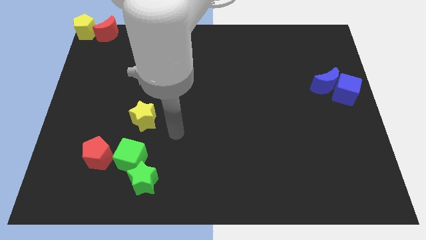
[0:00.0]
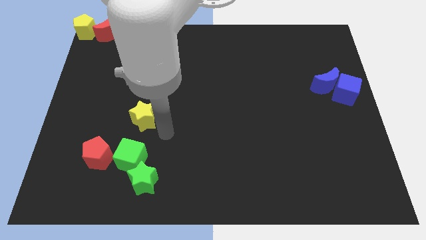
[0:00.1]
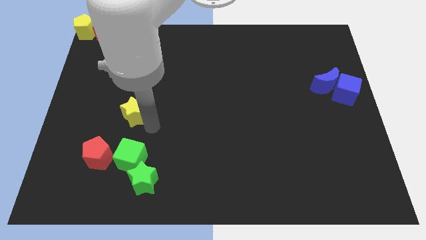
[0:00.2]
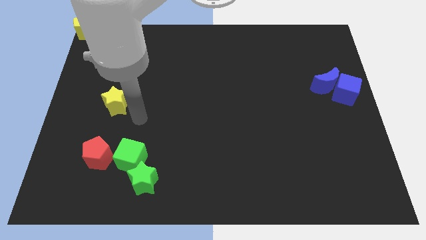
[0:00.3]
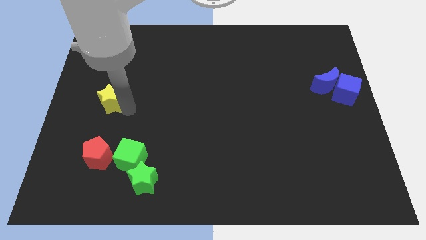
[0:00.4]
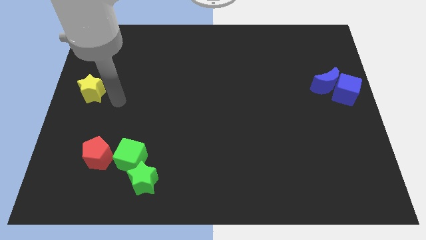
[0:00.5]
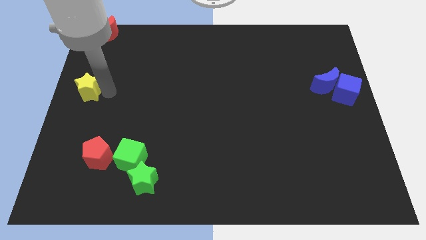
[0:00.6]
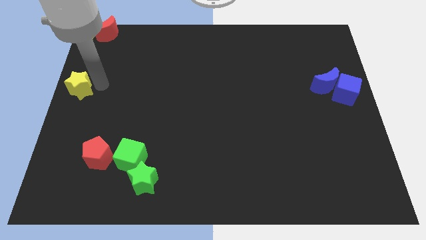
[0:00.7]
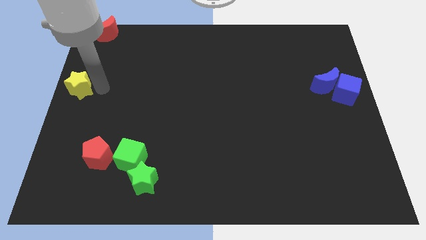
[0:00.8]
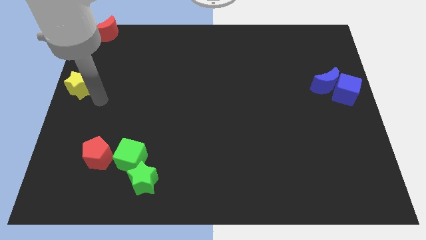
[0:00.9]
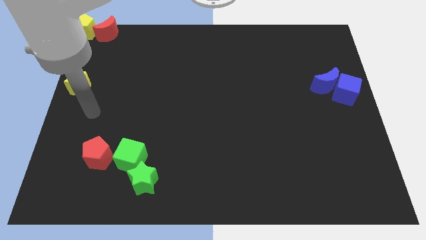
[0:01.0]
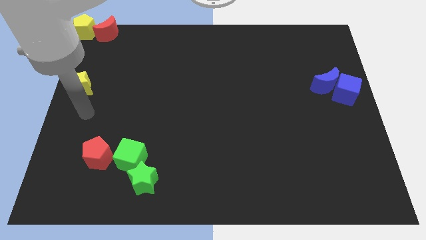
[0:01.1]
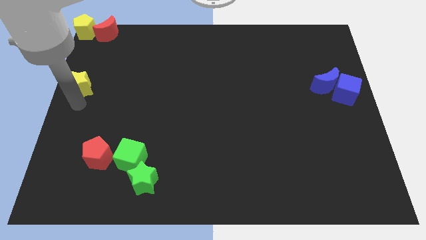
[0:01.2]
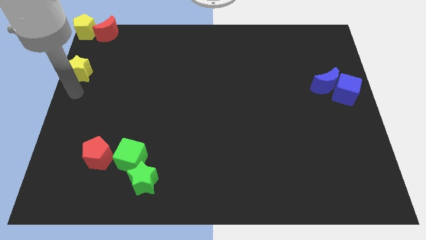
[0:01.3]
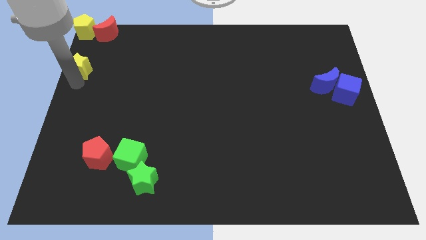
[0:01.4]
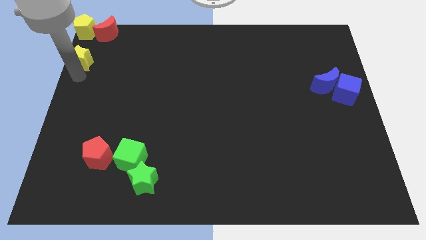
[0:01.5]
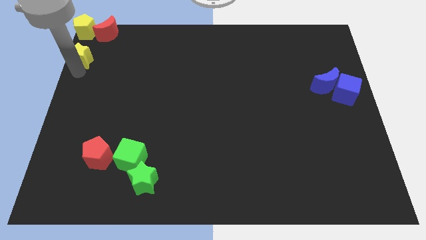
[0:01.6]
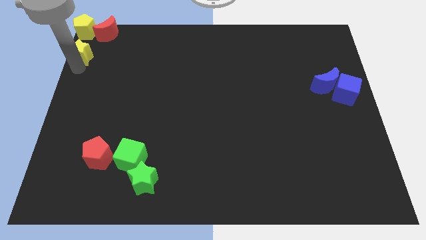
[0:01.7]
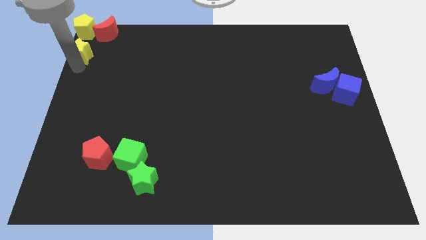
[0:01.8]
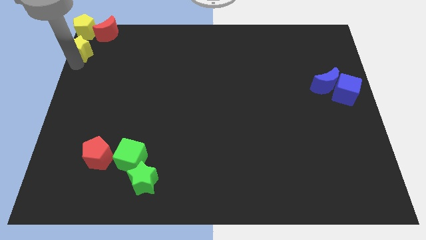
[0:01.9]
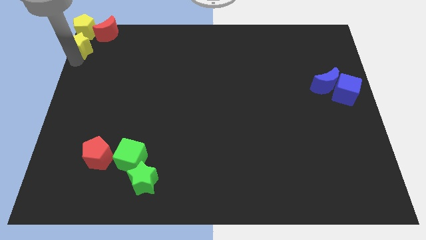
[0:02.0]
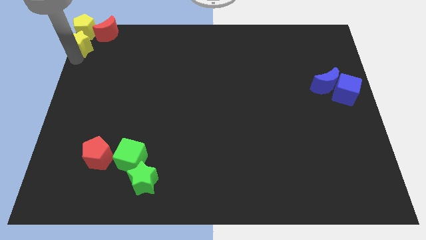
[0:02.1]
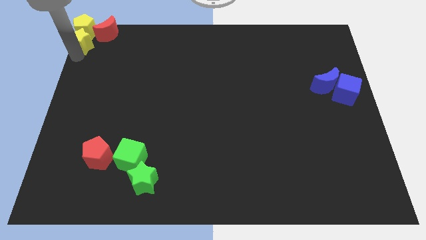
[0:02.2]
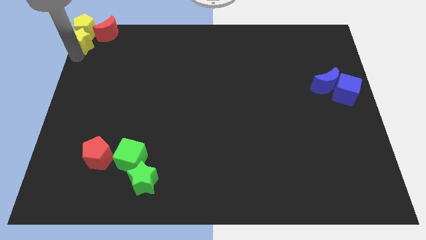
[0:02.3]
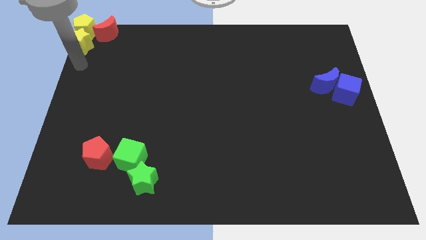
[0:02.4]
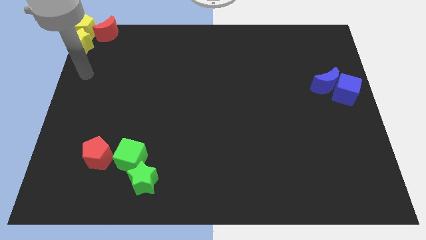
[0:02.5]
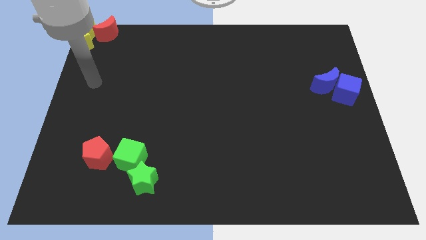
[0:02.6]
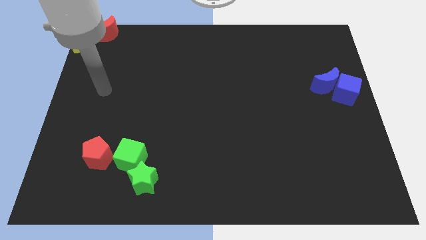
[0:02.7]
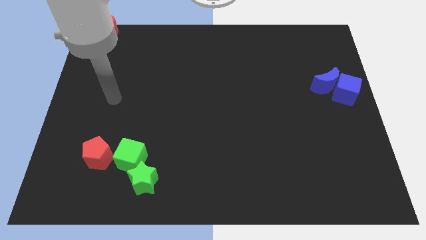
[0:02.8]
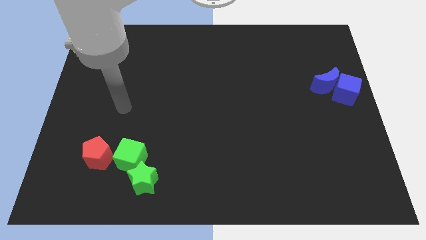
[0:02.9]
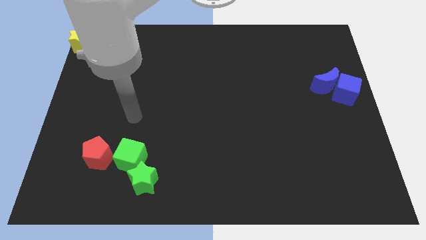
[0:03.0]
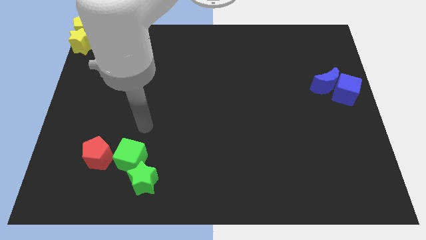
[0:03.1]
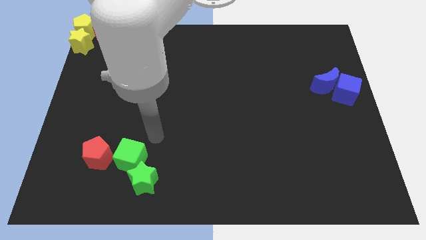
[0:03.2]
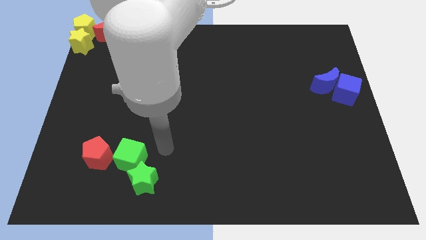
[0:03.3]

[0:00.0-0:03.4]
move the yellow star below the yellow pentagon

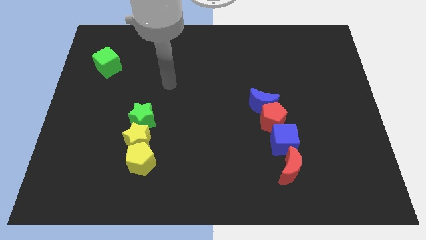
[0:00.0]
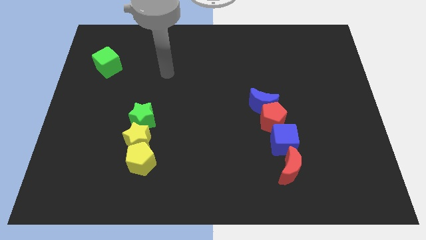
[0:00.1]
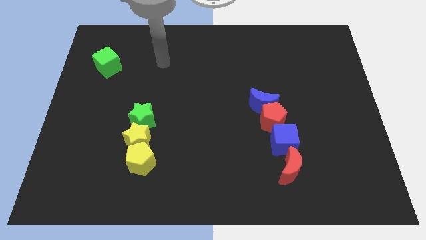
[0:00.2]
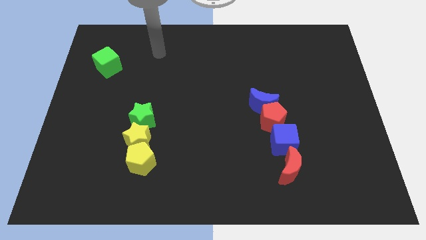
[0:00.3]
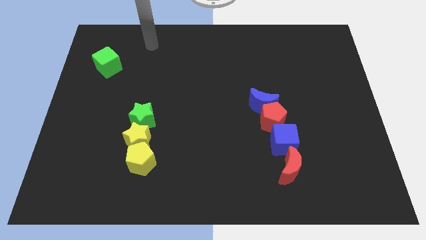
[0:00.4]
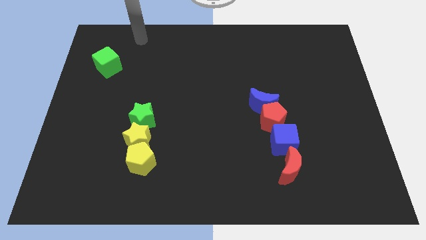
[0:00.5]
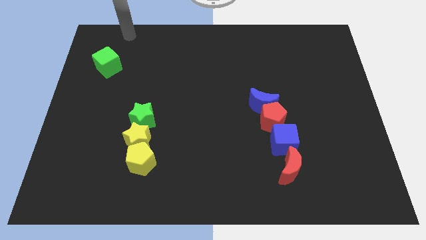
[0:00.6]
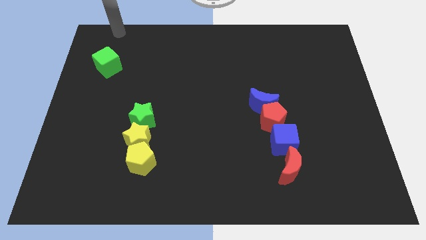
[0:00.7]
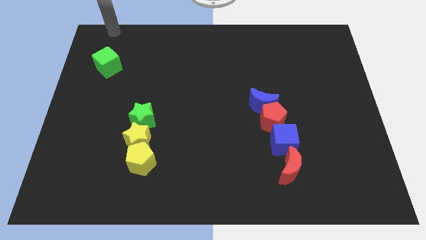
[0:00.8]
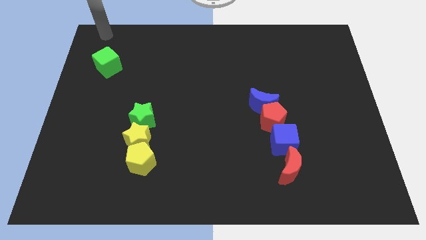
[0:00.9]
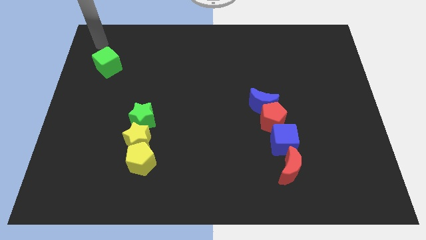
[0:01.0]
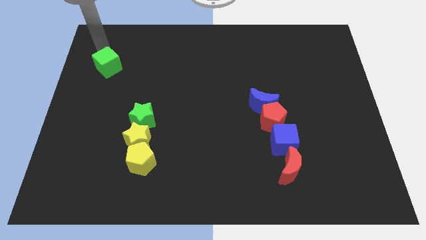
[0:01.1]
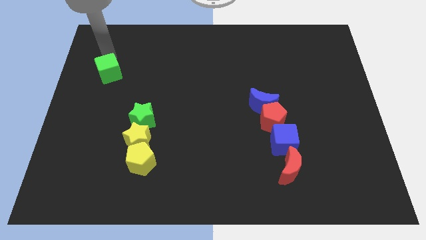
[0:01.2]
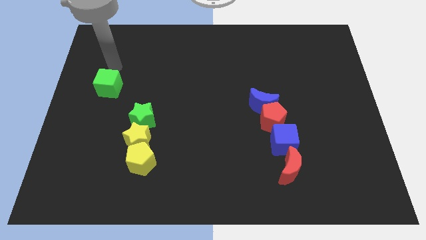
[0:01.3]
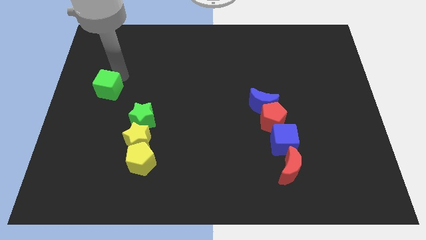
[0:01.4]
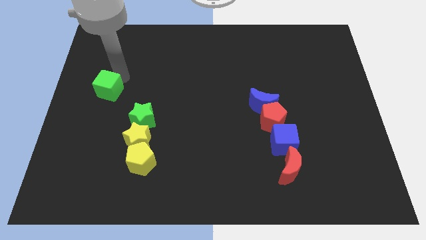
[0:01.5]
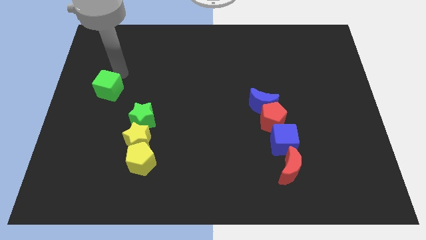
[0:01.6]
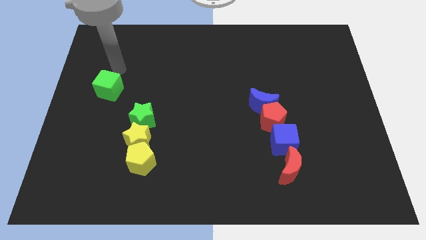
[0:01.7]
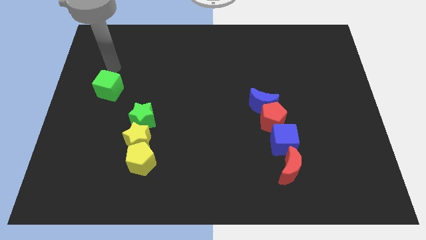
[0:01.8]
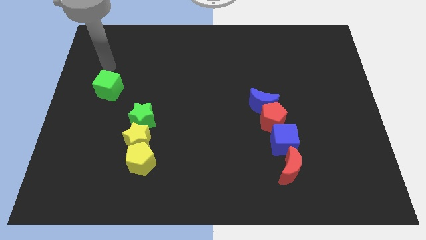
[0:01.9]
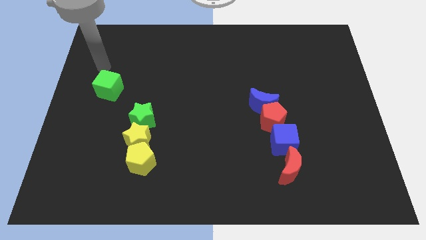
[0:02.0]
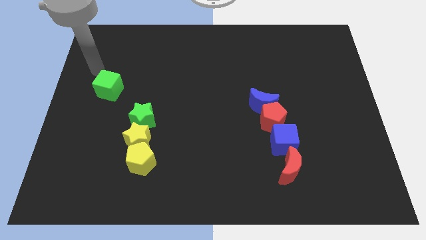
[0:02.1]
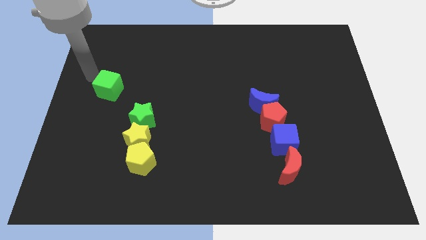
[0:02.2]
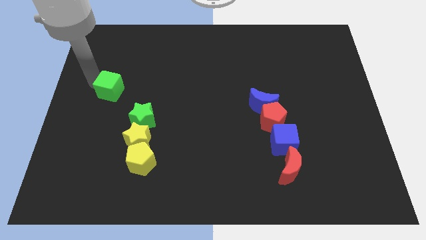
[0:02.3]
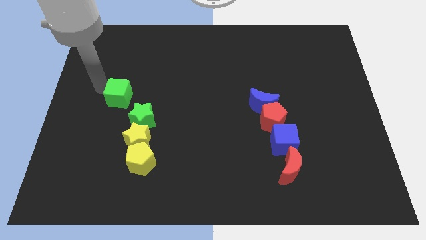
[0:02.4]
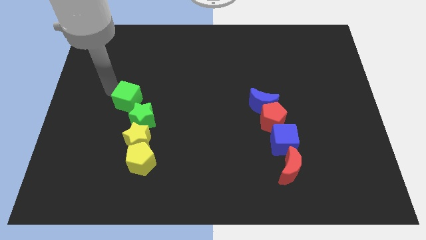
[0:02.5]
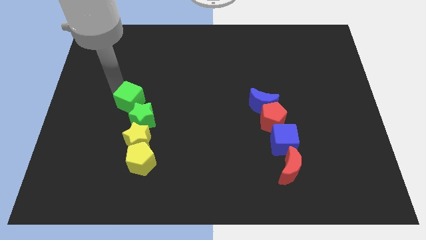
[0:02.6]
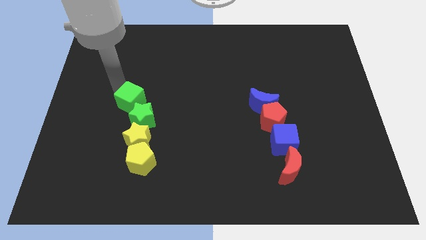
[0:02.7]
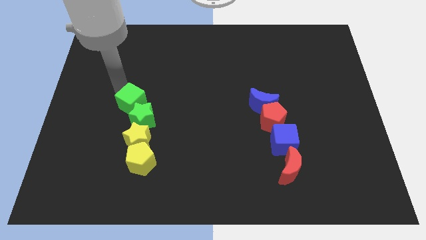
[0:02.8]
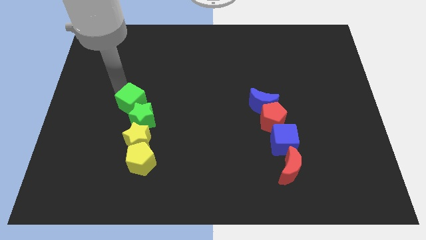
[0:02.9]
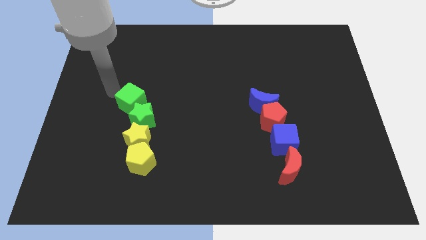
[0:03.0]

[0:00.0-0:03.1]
push the green cube slightly towards the green star

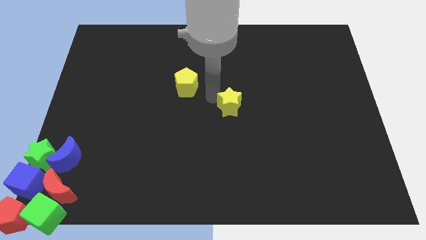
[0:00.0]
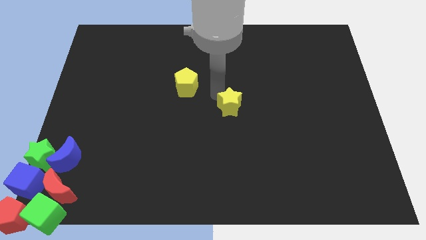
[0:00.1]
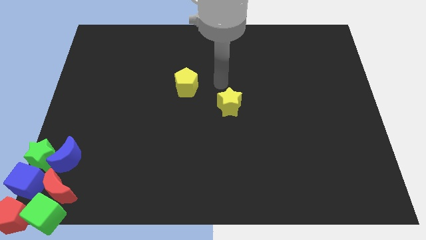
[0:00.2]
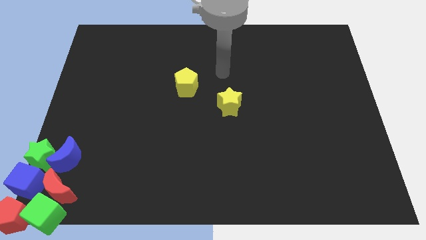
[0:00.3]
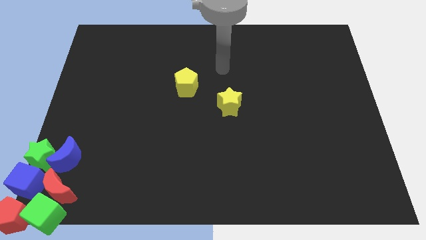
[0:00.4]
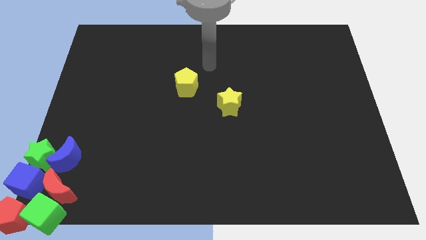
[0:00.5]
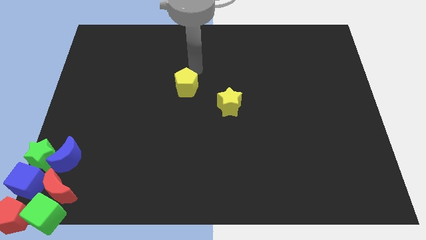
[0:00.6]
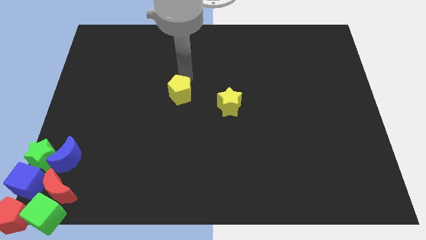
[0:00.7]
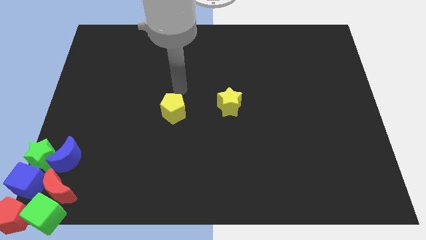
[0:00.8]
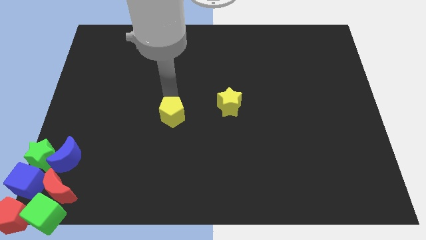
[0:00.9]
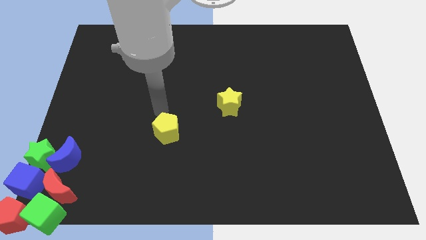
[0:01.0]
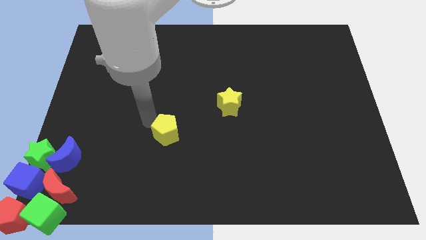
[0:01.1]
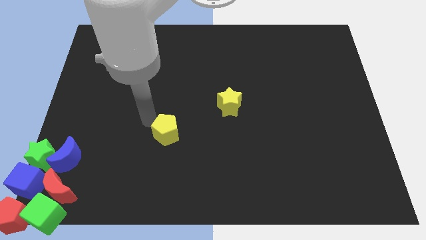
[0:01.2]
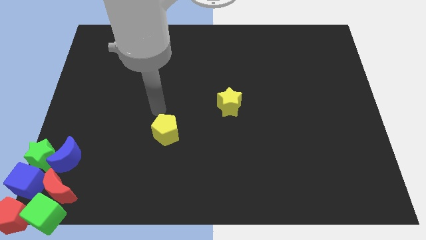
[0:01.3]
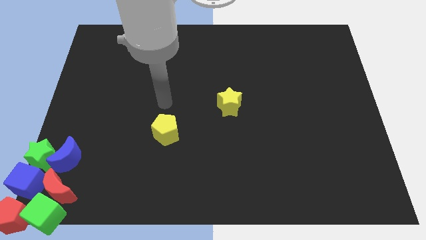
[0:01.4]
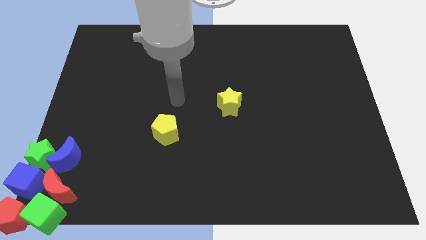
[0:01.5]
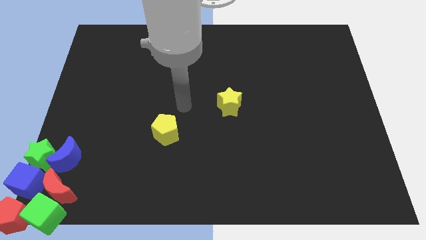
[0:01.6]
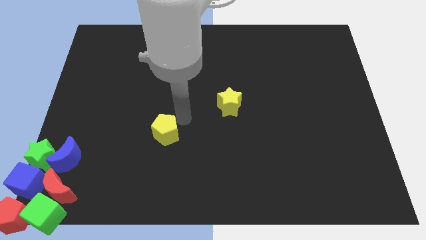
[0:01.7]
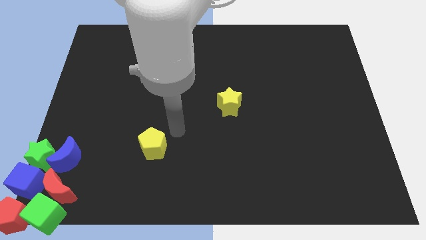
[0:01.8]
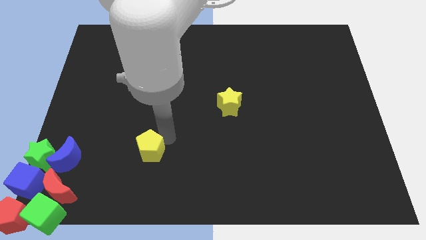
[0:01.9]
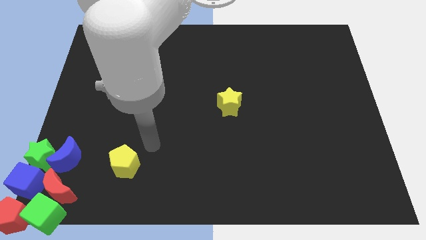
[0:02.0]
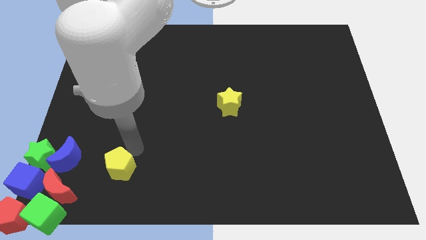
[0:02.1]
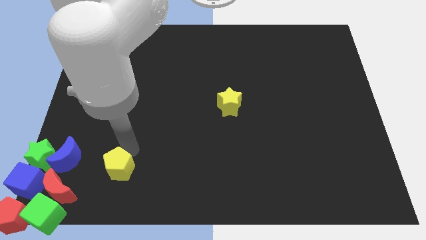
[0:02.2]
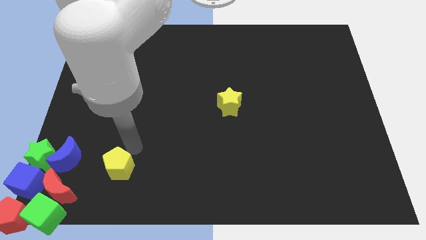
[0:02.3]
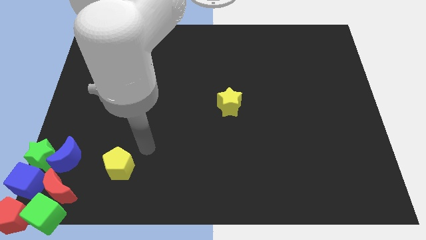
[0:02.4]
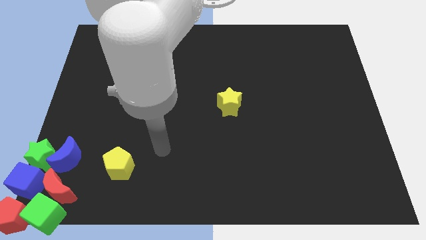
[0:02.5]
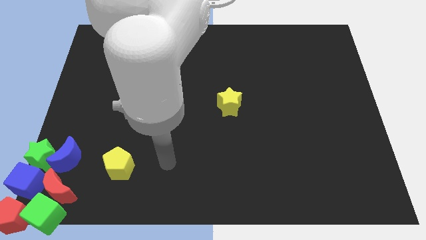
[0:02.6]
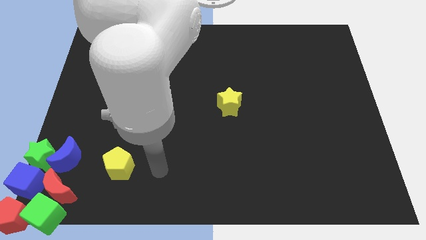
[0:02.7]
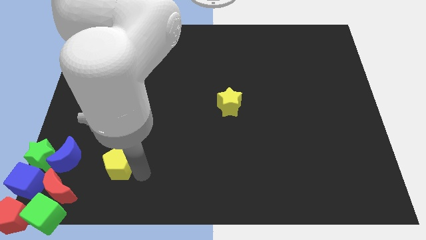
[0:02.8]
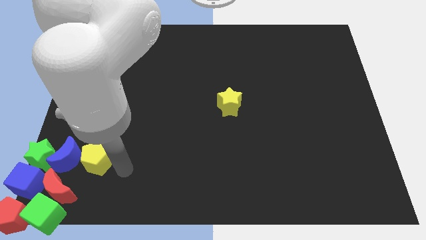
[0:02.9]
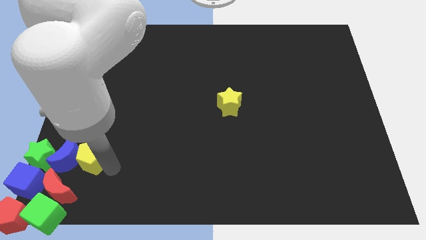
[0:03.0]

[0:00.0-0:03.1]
move the yellow pentagon towards the group of blocks
